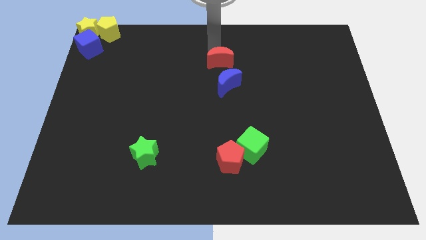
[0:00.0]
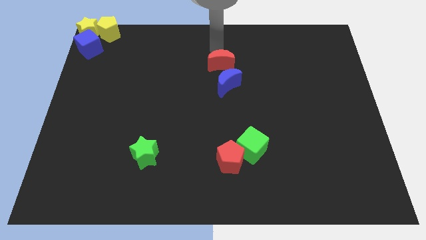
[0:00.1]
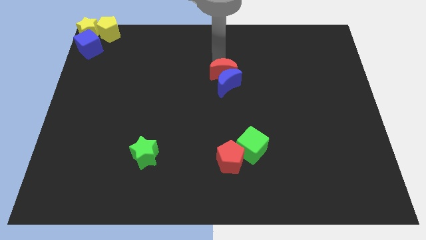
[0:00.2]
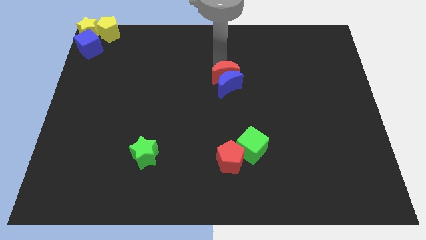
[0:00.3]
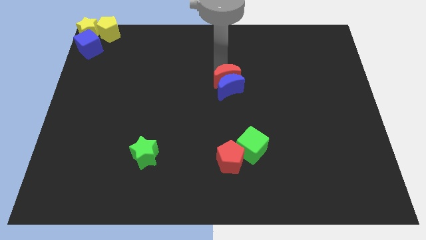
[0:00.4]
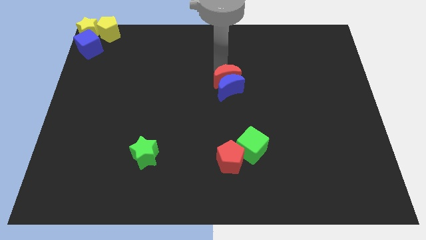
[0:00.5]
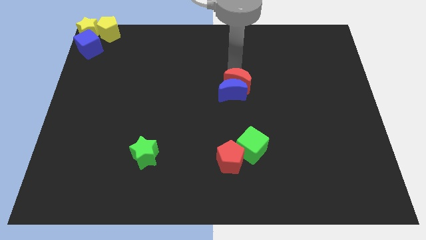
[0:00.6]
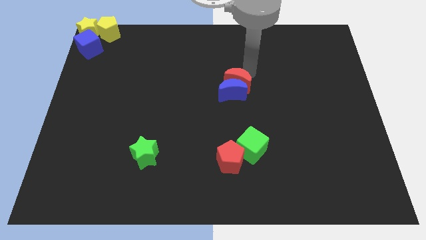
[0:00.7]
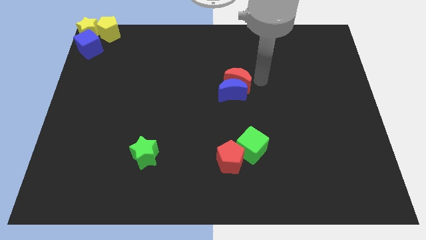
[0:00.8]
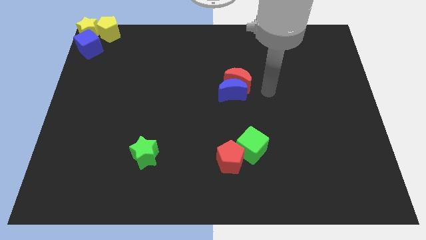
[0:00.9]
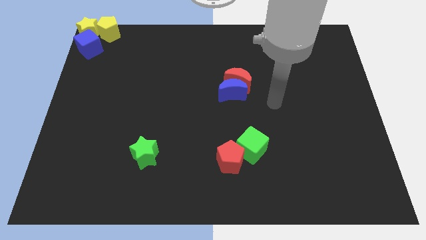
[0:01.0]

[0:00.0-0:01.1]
push blue moon with the red moon

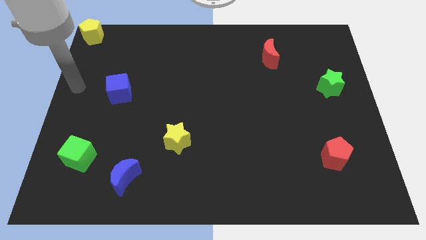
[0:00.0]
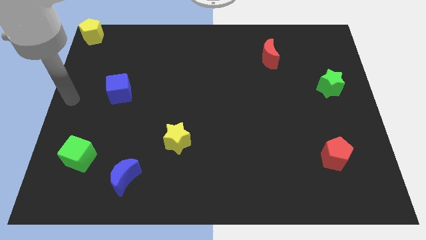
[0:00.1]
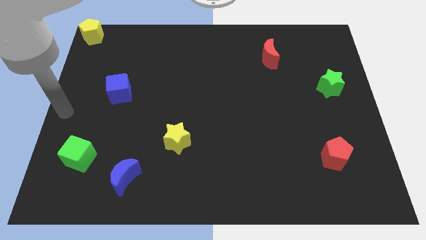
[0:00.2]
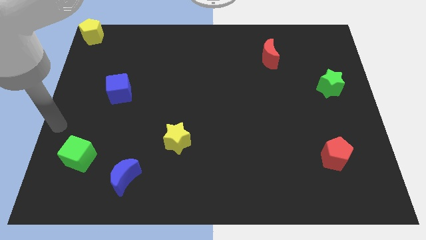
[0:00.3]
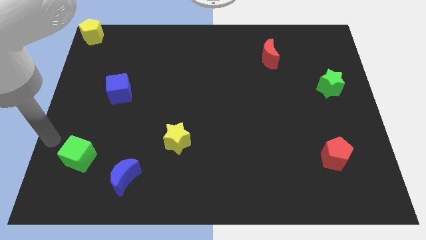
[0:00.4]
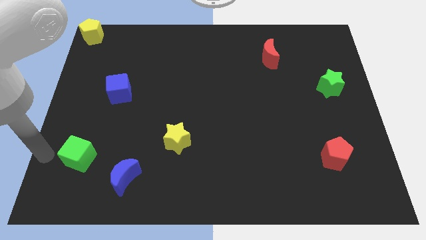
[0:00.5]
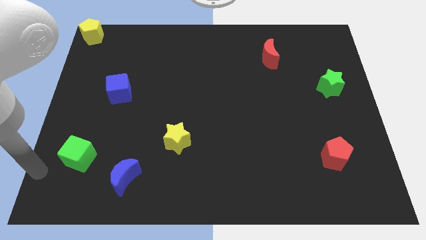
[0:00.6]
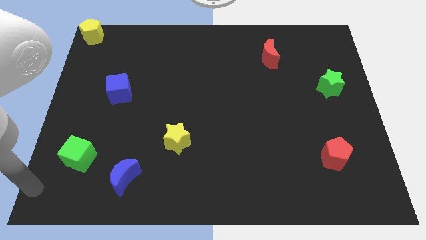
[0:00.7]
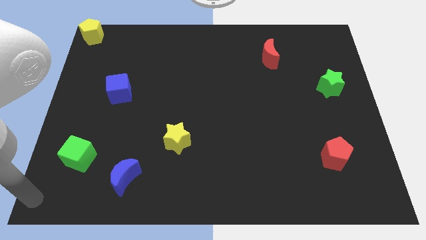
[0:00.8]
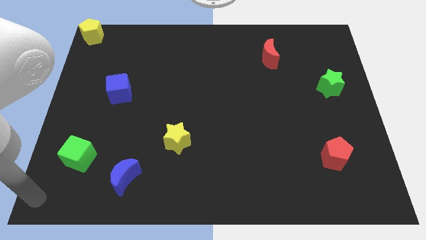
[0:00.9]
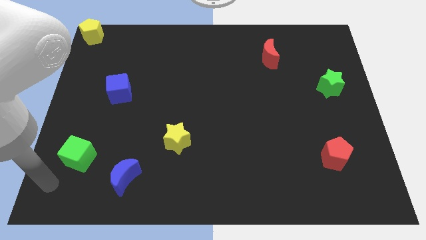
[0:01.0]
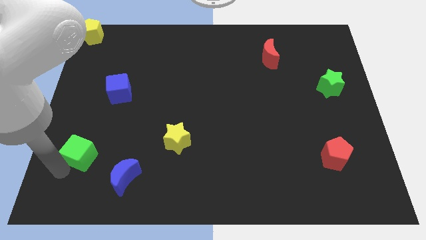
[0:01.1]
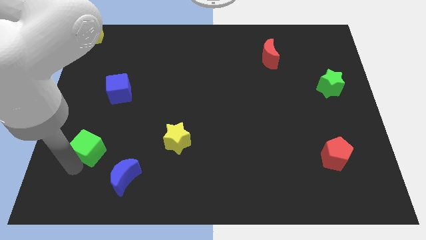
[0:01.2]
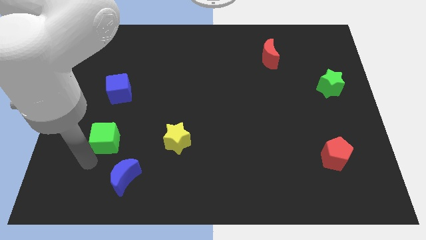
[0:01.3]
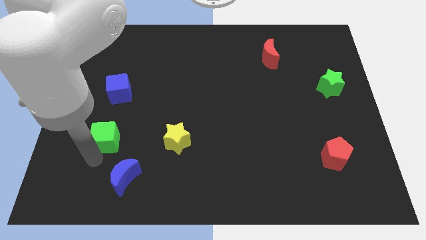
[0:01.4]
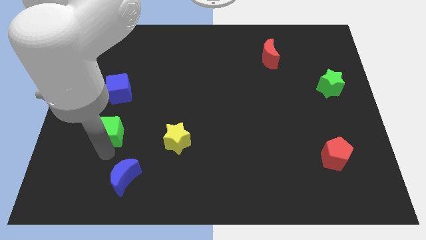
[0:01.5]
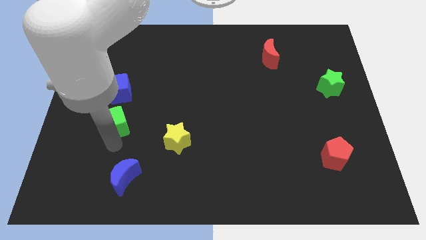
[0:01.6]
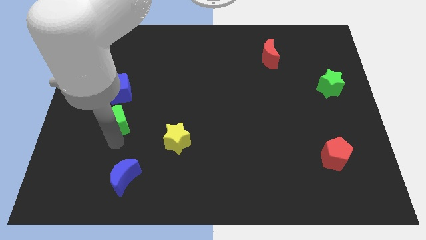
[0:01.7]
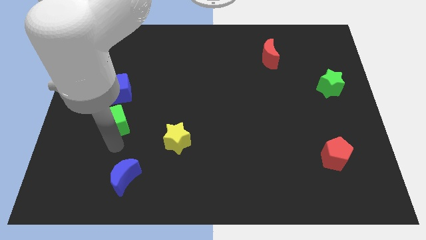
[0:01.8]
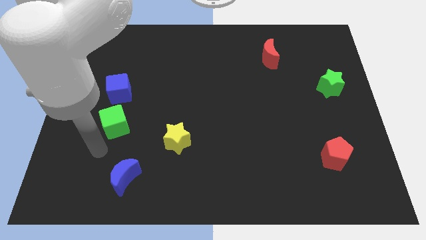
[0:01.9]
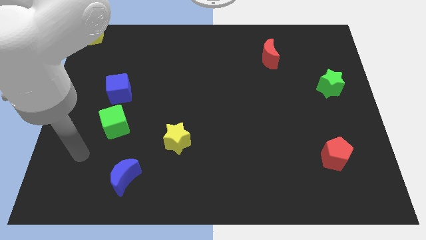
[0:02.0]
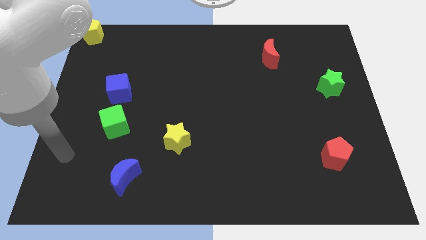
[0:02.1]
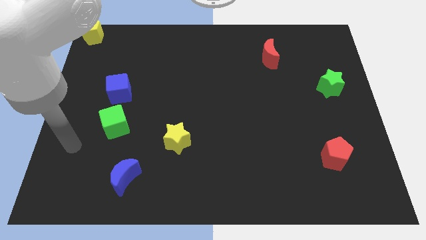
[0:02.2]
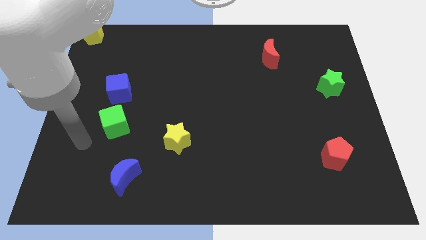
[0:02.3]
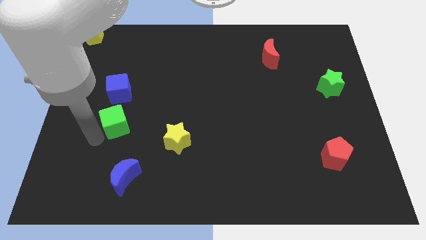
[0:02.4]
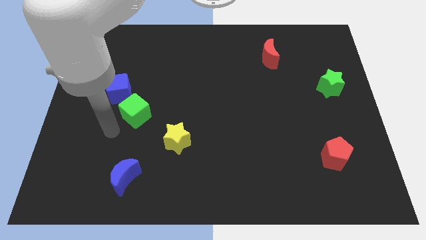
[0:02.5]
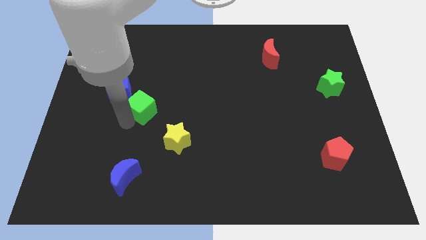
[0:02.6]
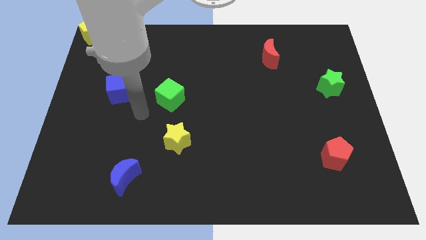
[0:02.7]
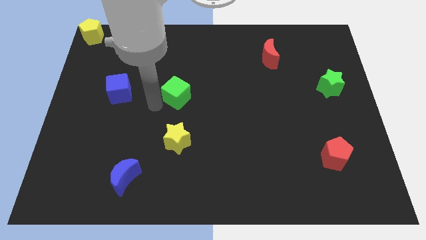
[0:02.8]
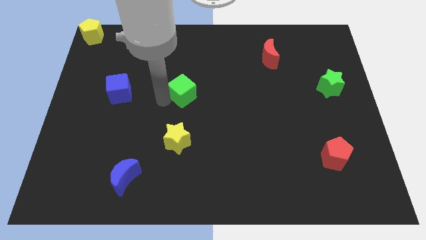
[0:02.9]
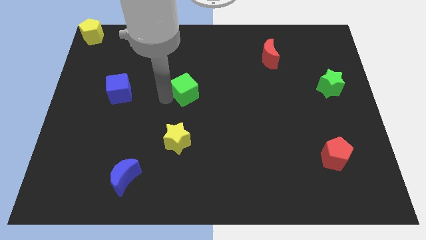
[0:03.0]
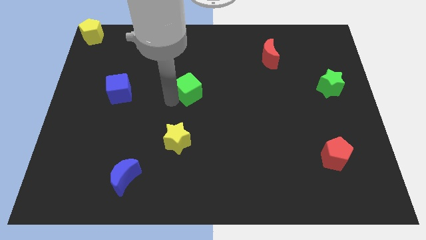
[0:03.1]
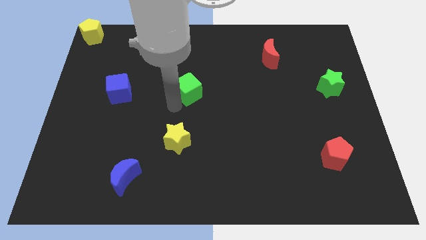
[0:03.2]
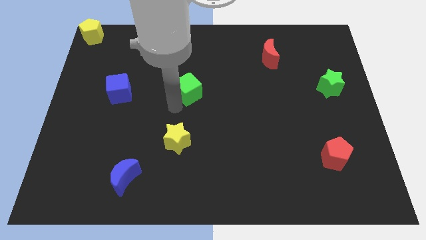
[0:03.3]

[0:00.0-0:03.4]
push the green cube to the right side of the blue cube

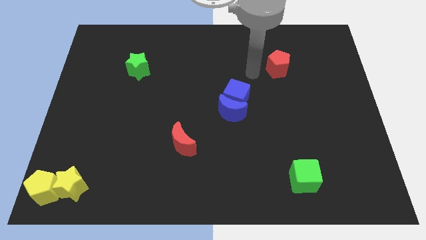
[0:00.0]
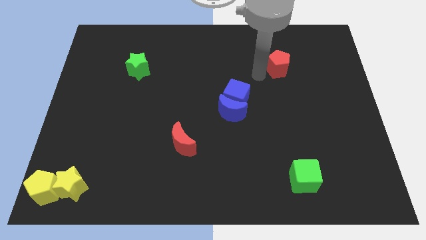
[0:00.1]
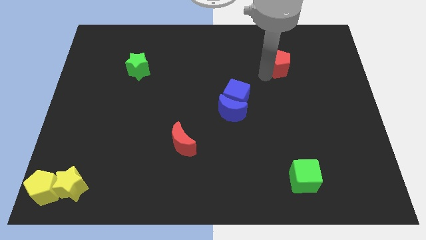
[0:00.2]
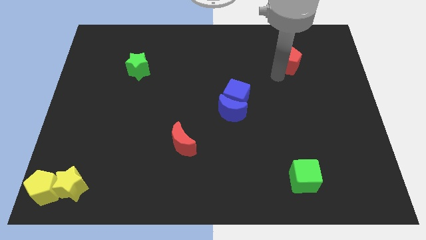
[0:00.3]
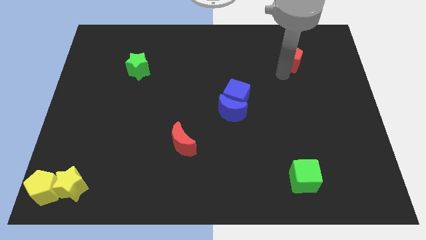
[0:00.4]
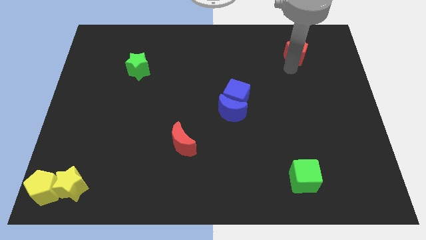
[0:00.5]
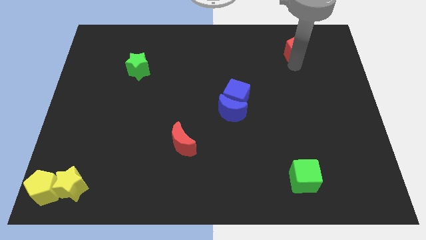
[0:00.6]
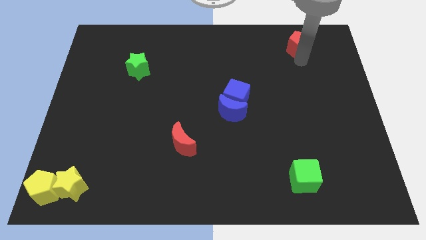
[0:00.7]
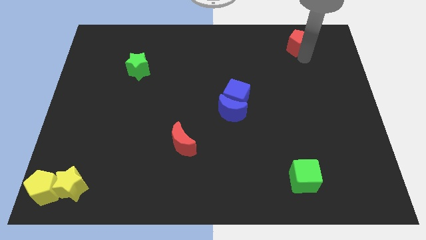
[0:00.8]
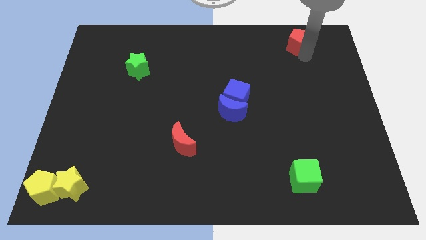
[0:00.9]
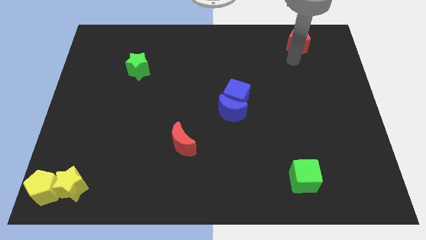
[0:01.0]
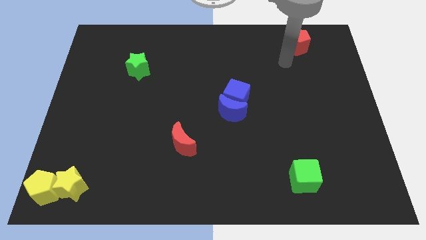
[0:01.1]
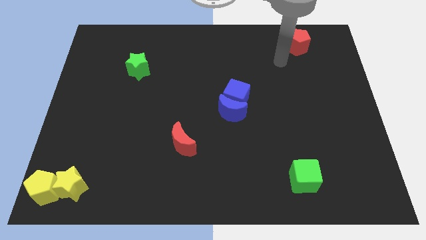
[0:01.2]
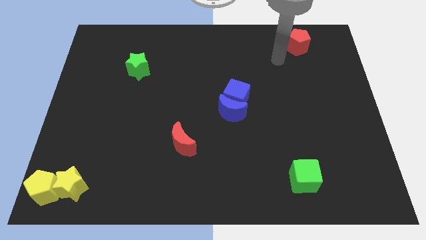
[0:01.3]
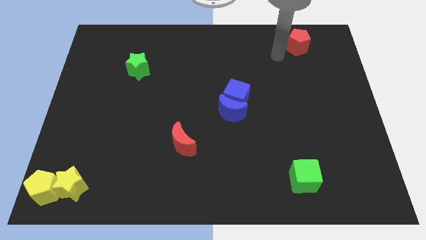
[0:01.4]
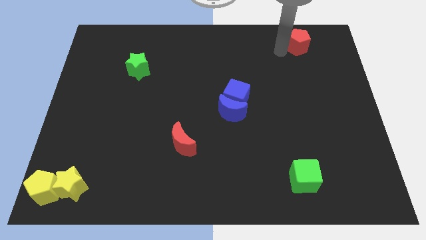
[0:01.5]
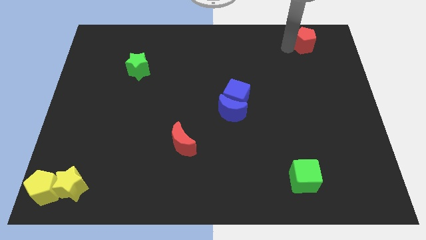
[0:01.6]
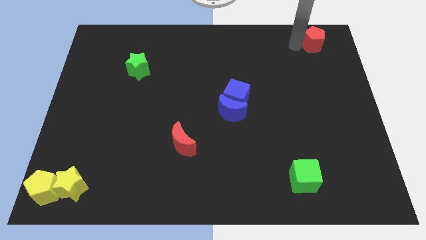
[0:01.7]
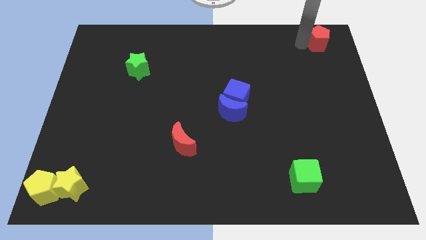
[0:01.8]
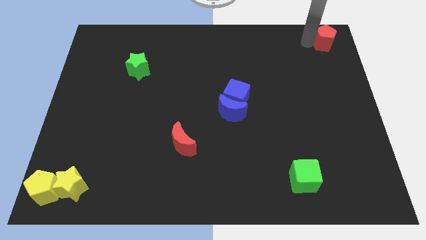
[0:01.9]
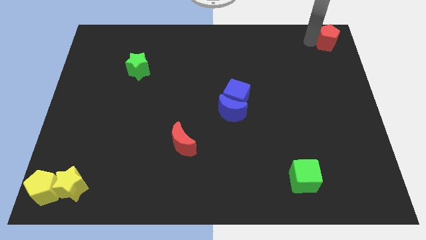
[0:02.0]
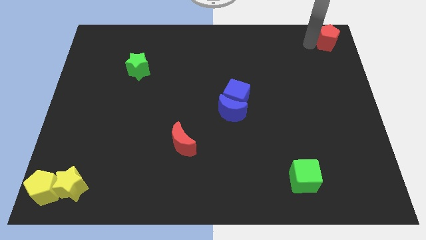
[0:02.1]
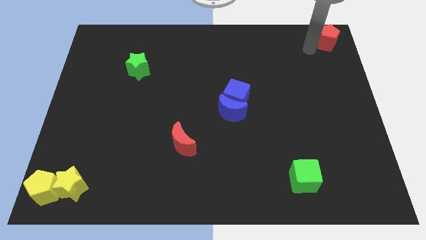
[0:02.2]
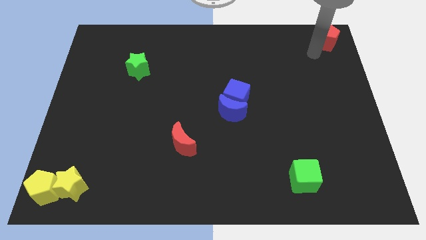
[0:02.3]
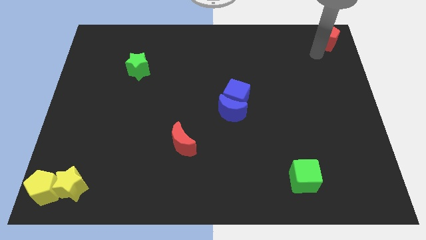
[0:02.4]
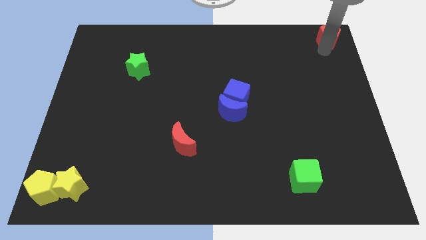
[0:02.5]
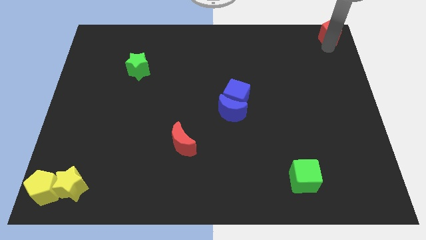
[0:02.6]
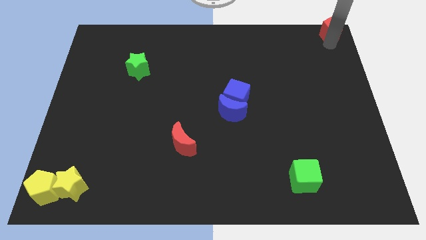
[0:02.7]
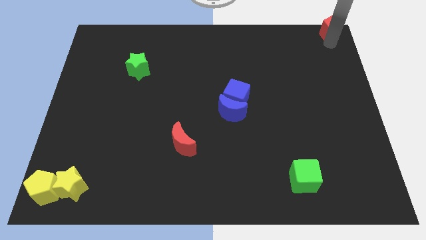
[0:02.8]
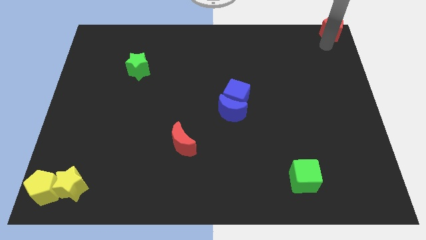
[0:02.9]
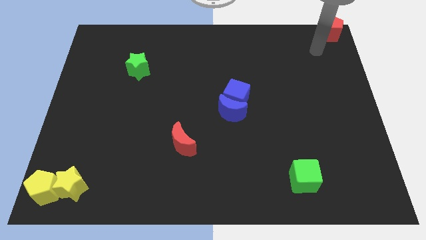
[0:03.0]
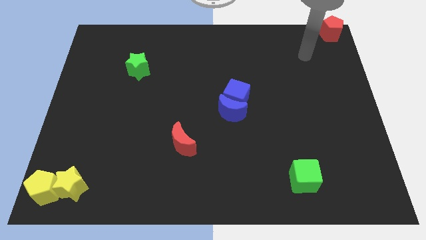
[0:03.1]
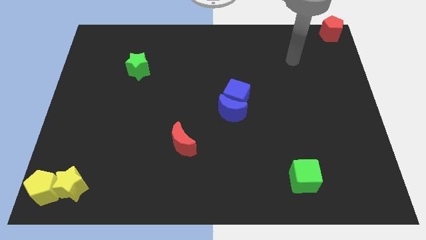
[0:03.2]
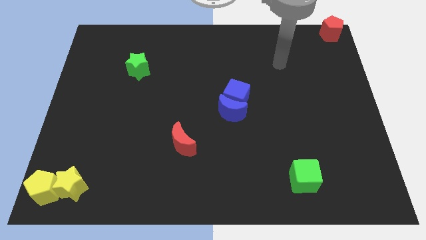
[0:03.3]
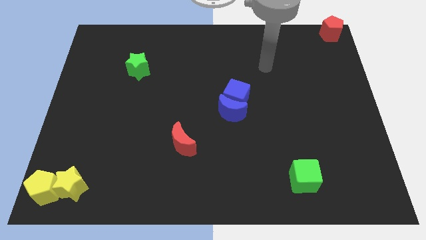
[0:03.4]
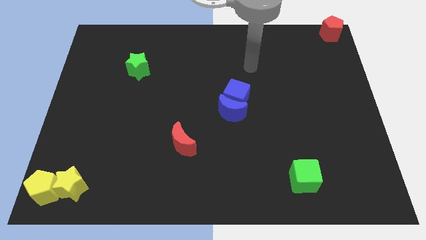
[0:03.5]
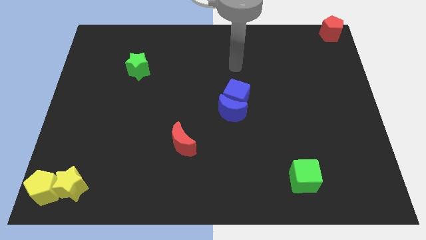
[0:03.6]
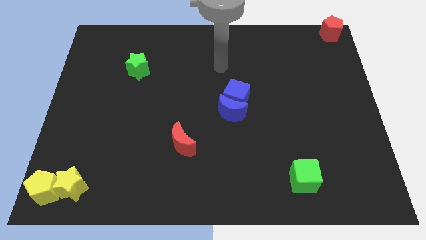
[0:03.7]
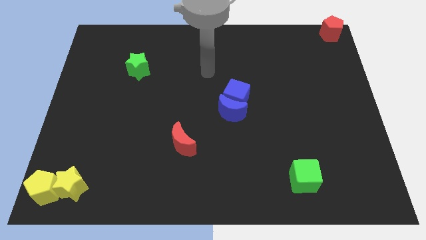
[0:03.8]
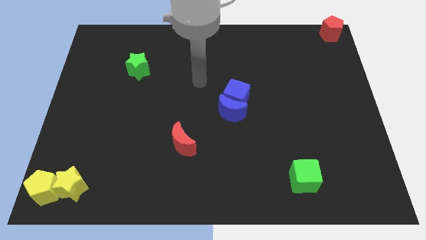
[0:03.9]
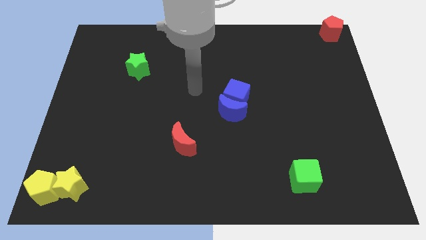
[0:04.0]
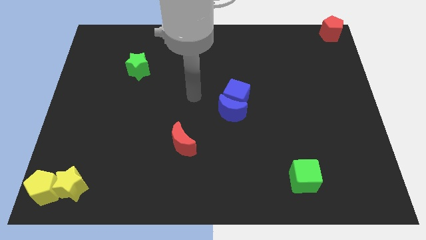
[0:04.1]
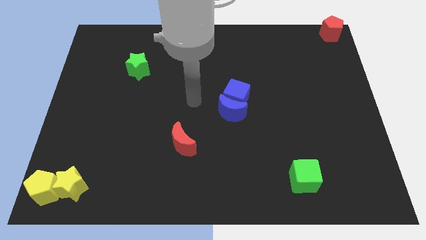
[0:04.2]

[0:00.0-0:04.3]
push the red pentagon to the top right corner of the board
